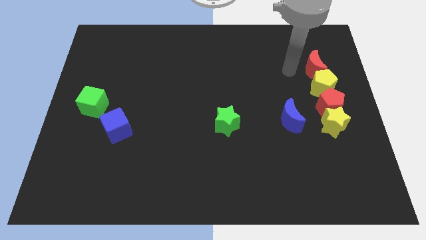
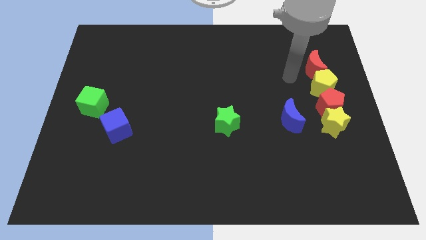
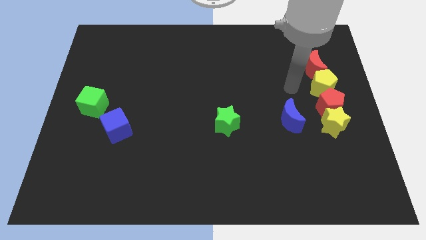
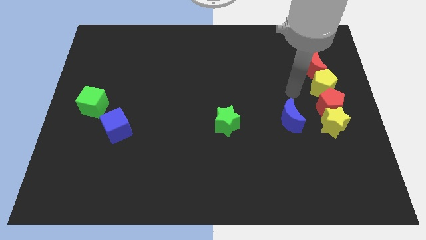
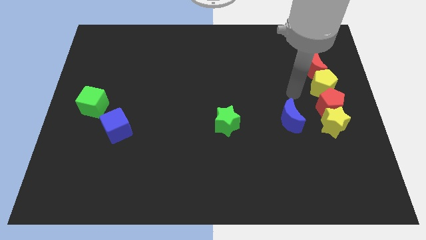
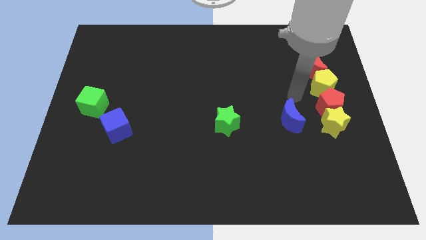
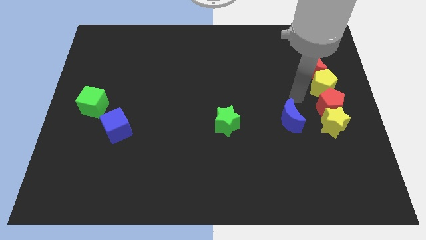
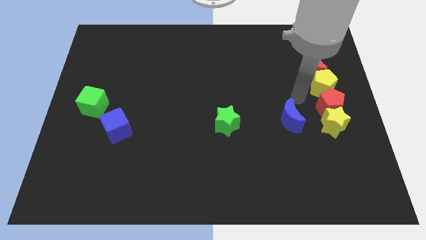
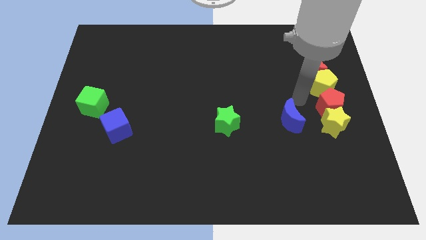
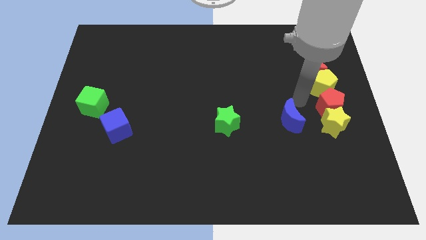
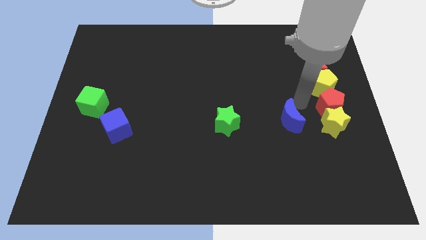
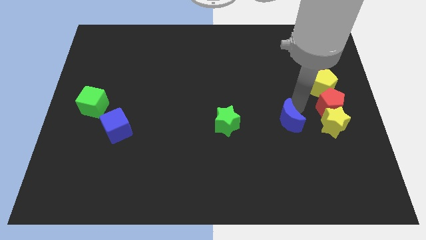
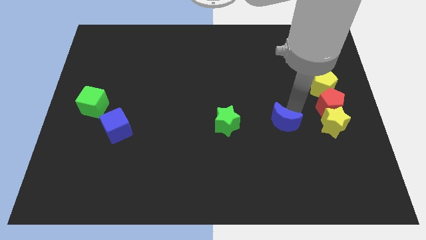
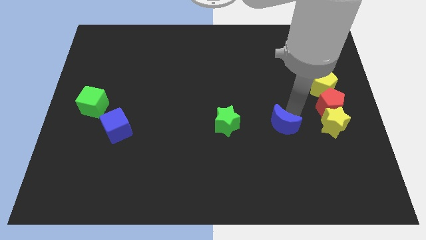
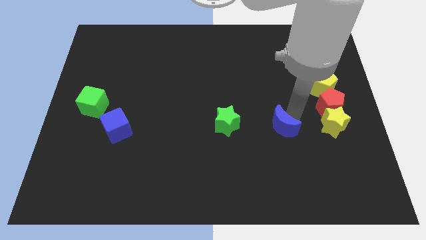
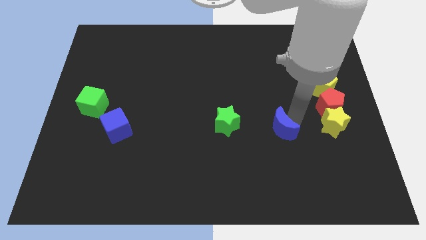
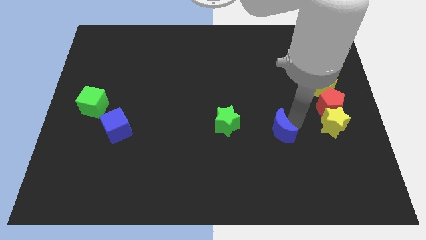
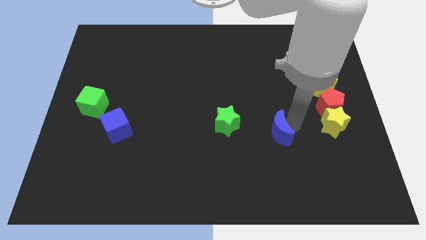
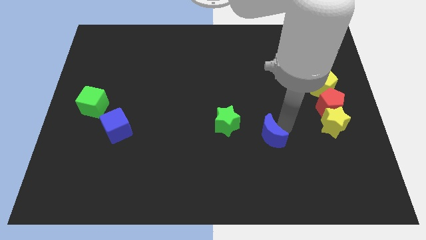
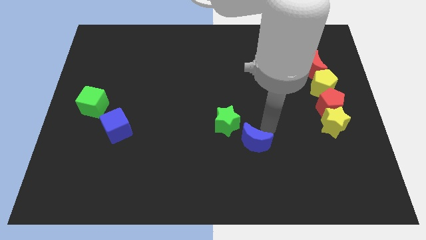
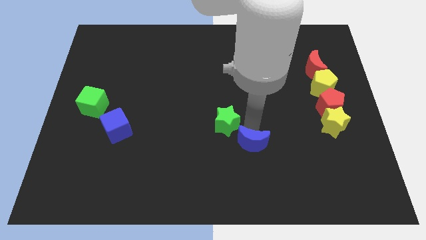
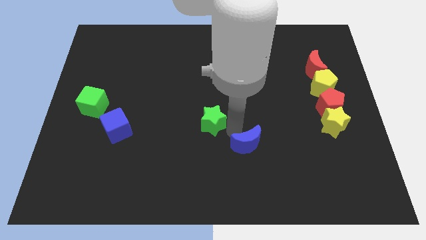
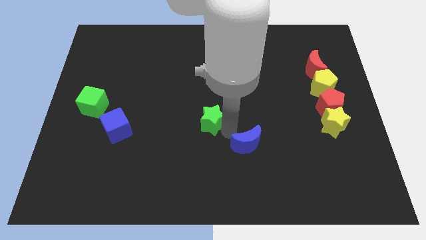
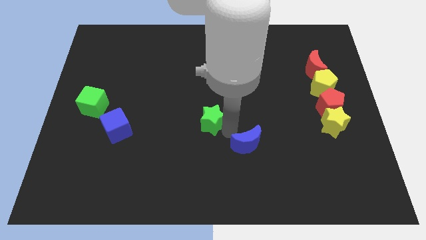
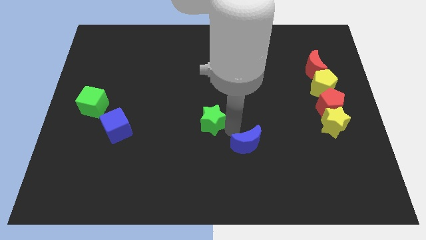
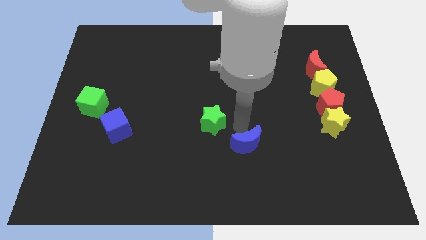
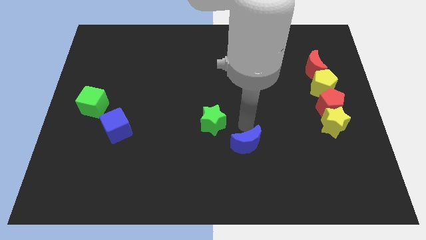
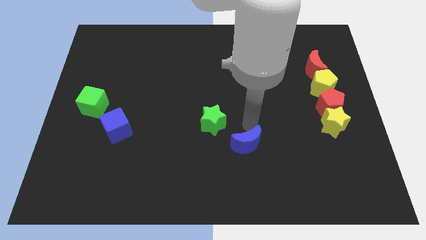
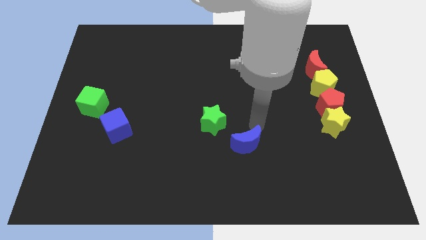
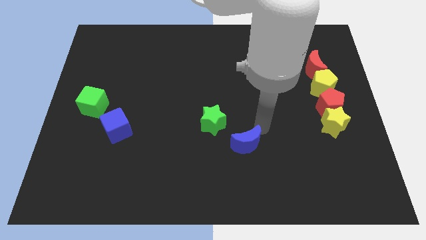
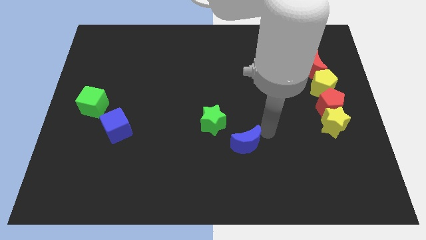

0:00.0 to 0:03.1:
put the blue moon at the bottom right side of the green star

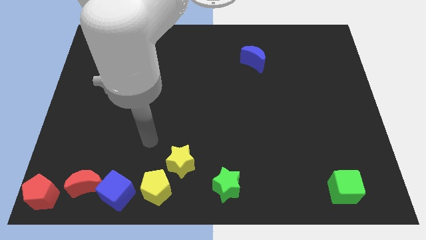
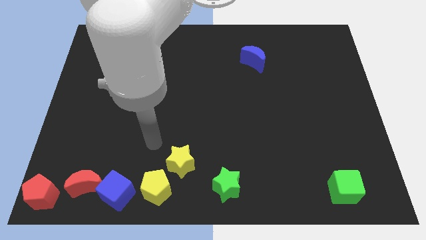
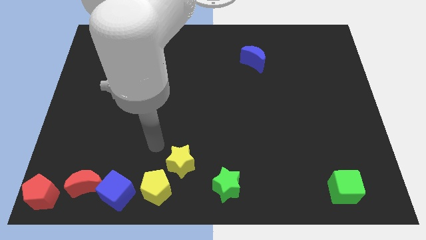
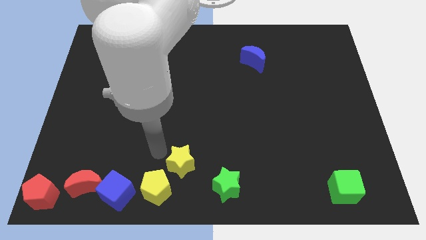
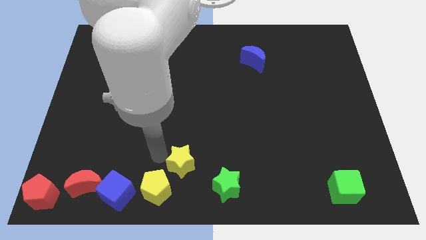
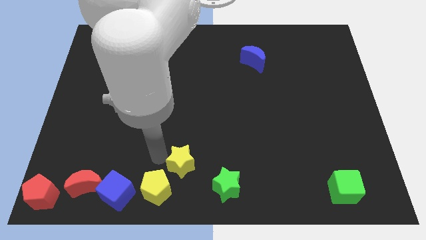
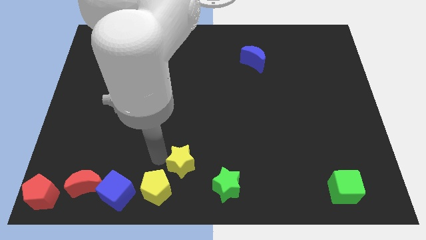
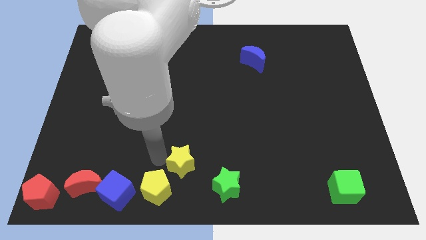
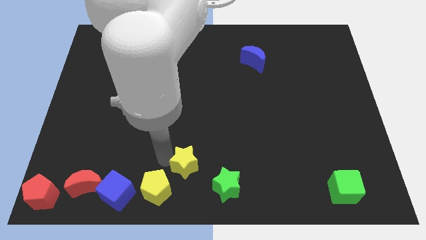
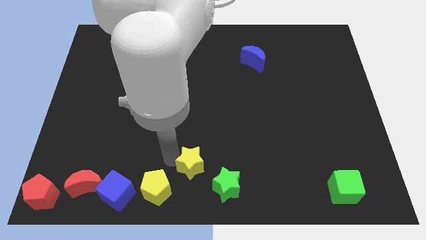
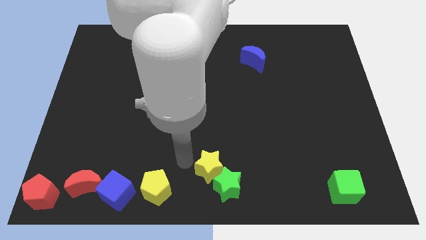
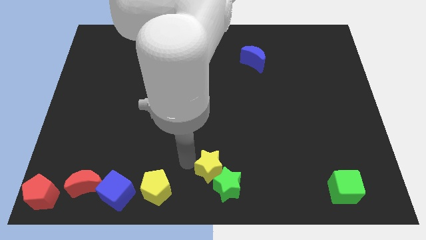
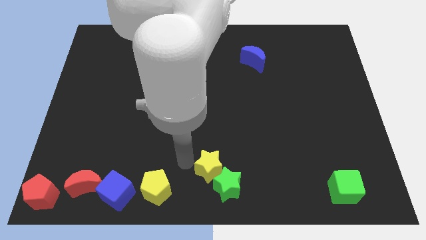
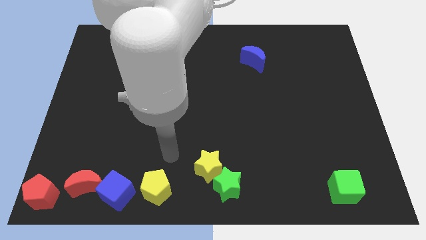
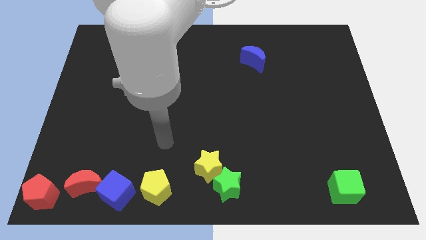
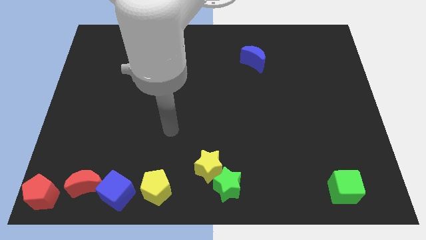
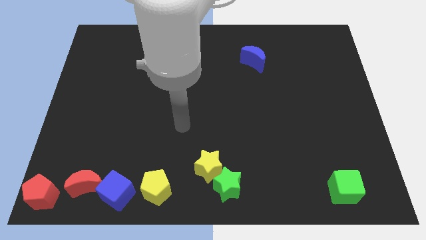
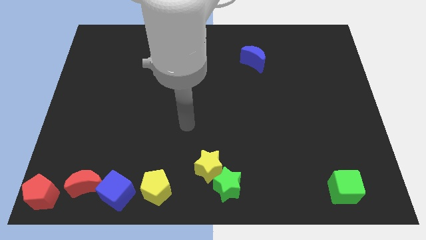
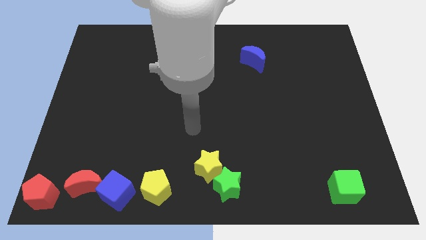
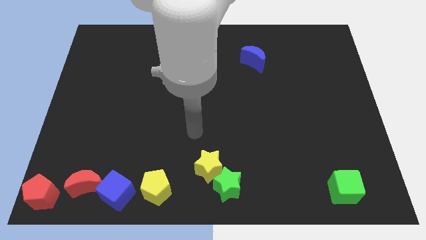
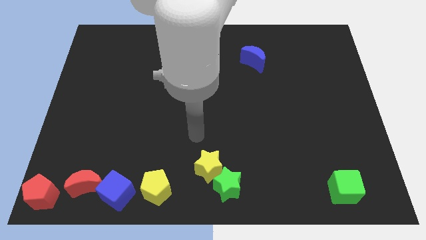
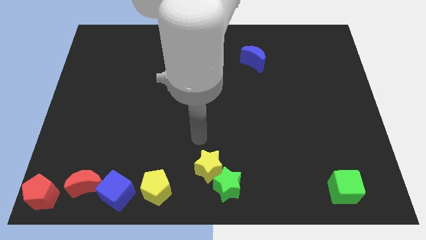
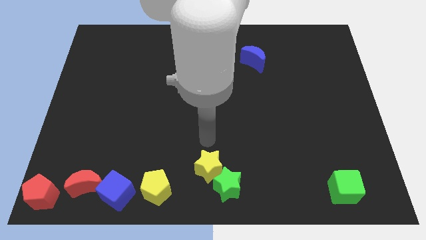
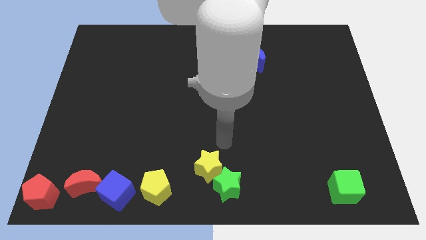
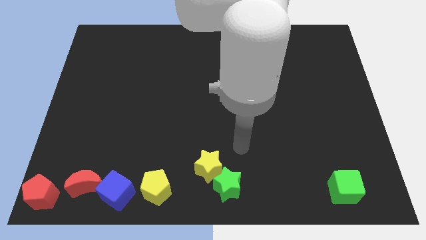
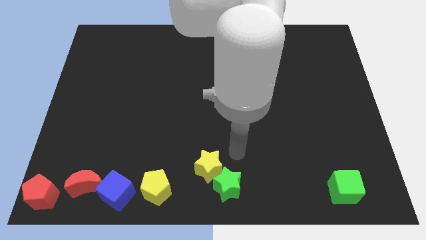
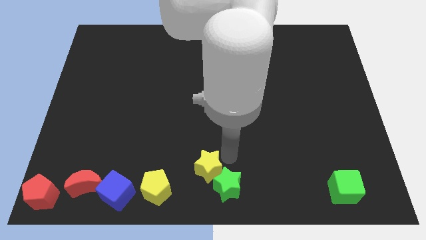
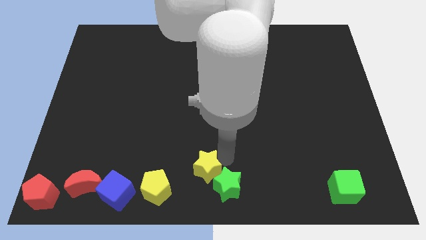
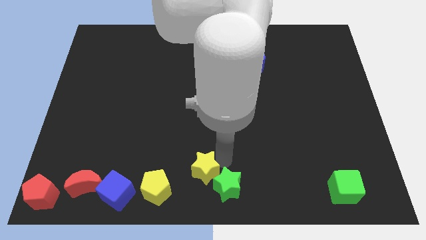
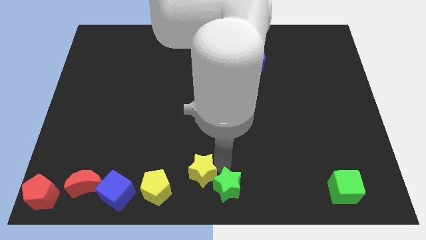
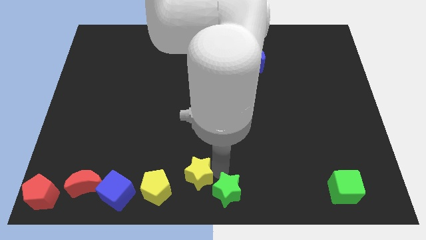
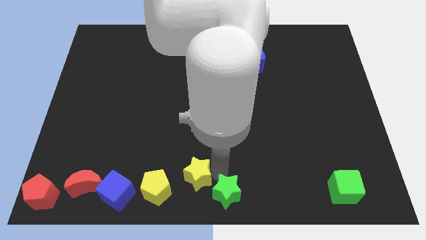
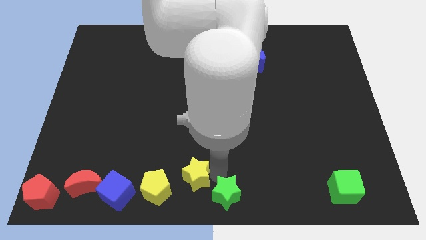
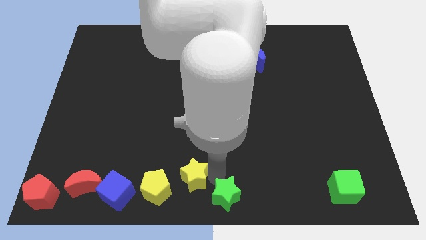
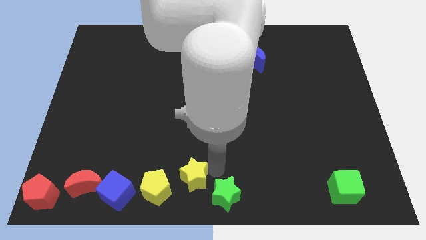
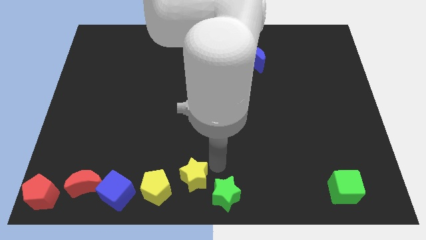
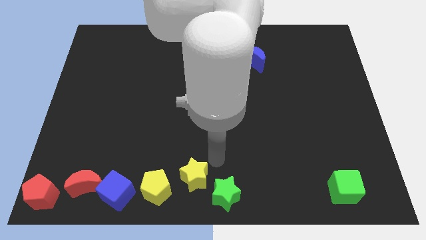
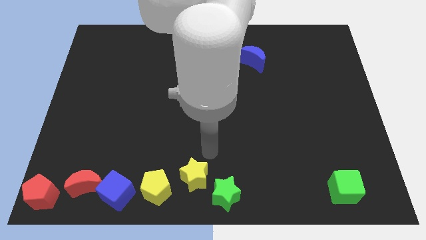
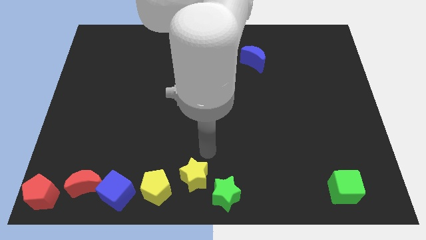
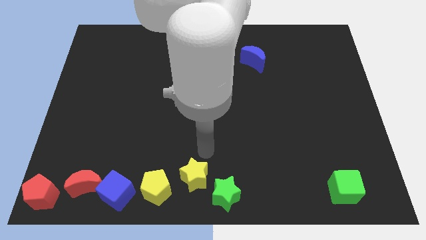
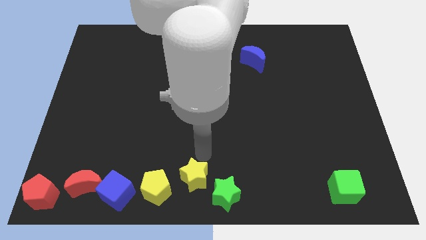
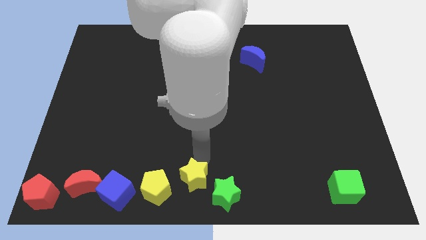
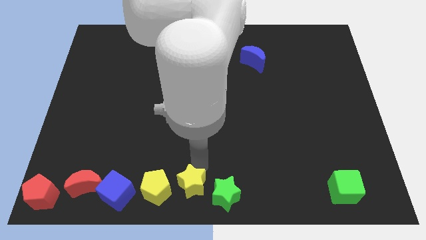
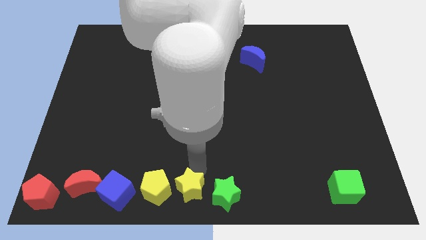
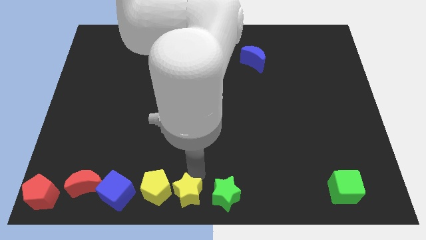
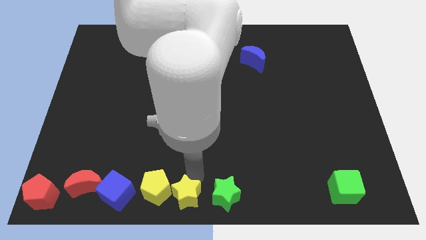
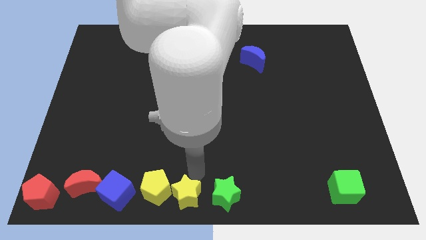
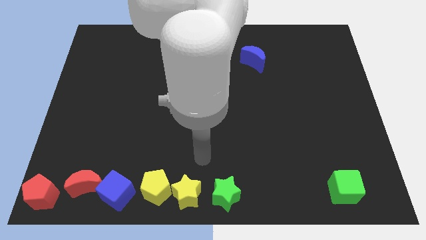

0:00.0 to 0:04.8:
move the yellow star in between the green star and the yellow pentagon

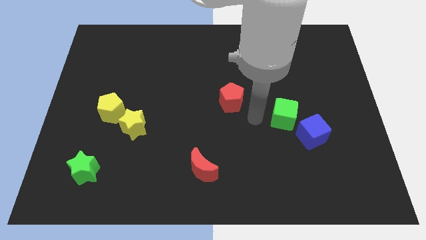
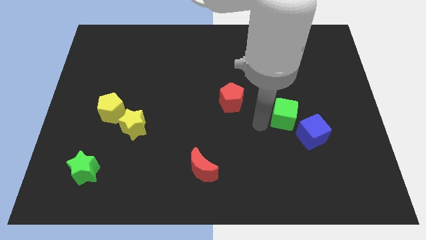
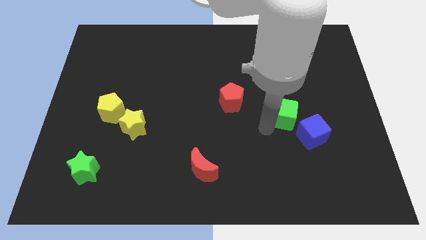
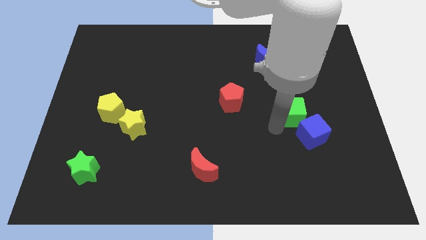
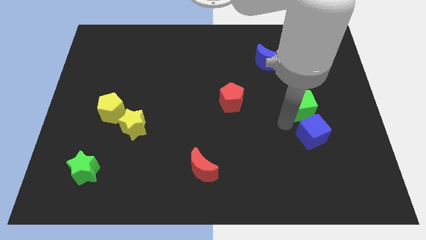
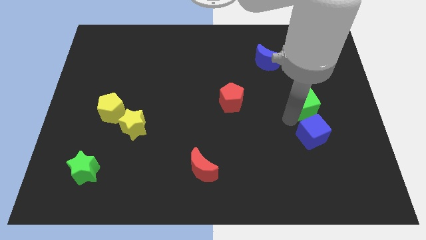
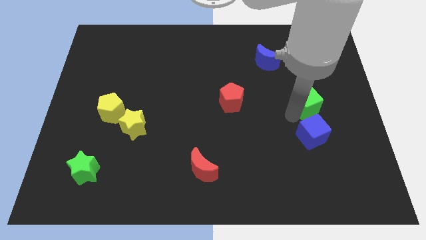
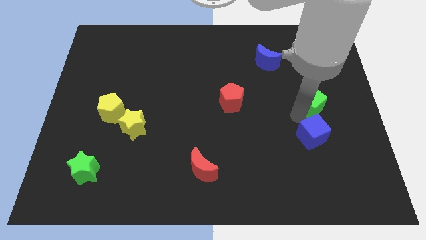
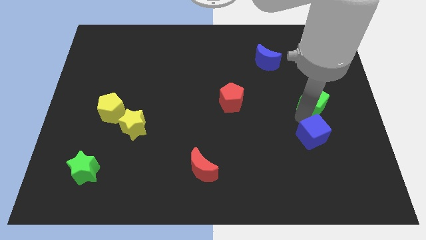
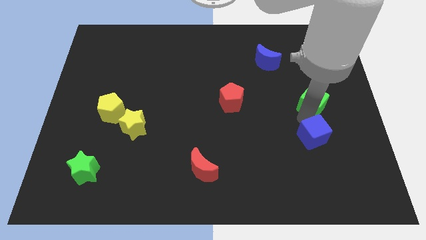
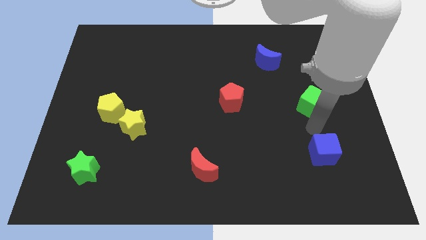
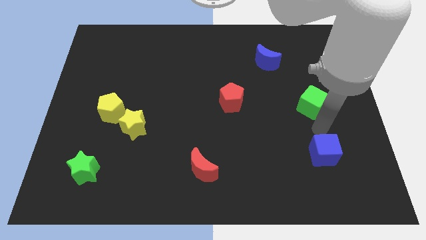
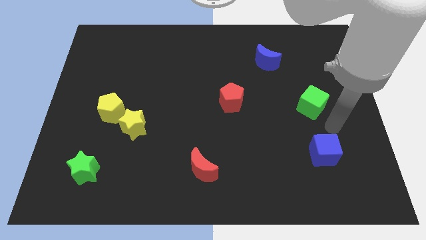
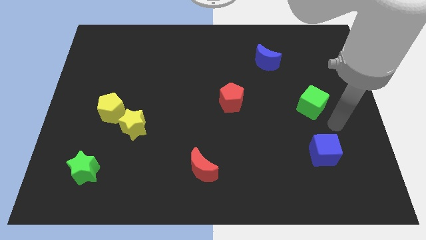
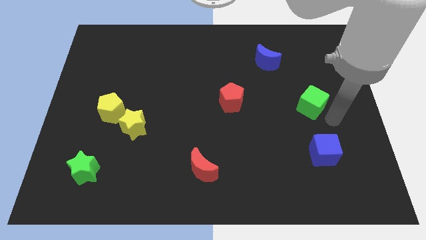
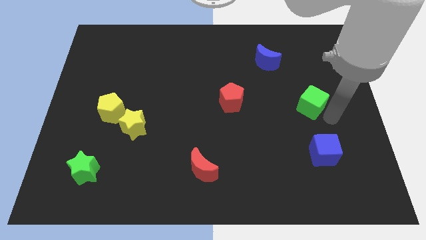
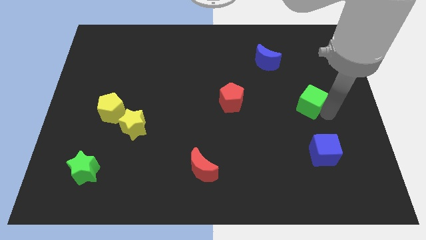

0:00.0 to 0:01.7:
separate the green and blue cube
